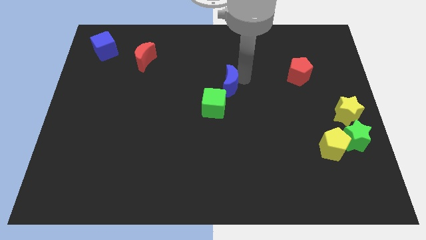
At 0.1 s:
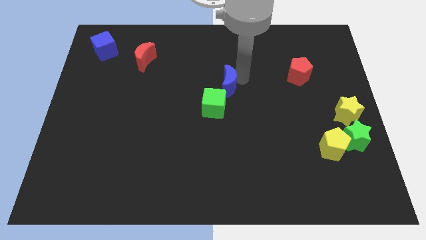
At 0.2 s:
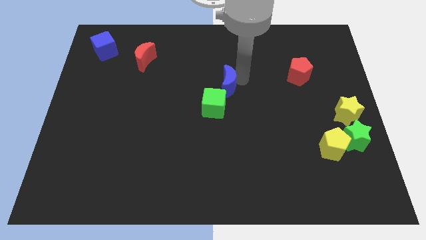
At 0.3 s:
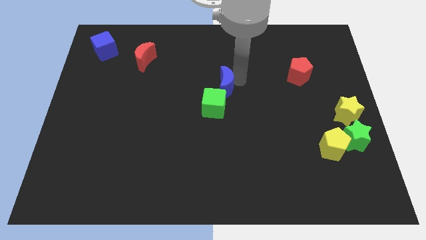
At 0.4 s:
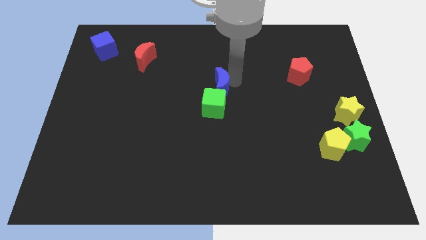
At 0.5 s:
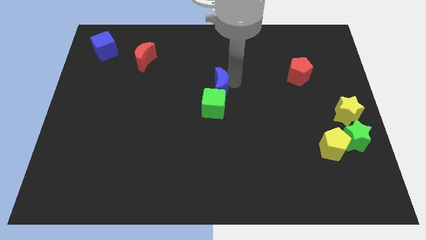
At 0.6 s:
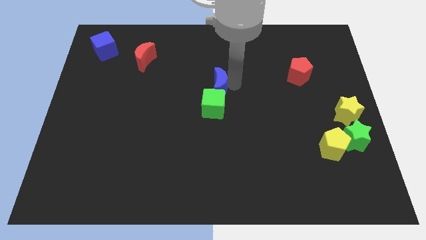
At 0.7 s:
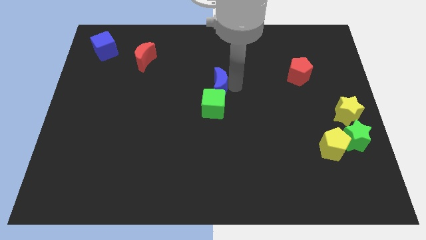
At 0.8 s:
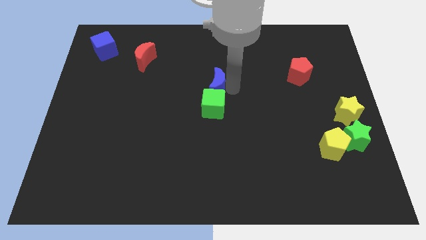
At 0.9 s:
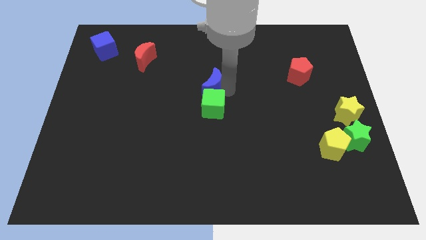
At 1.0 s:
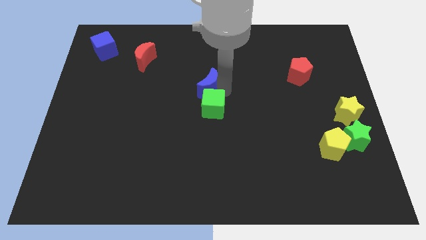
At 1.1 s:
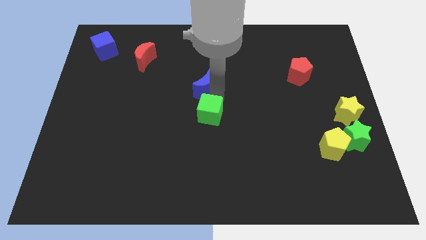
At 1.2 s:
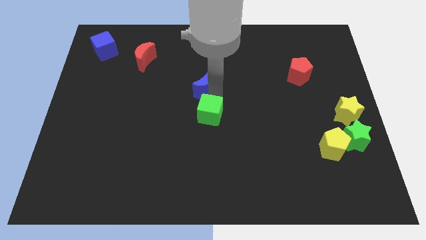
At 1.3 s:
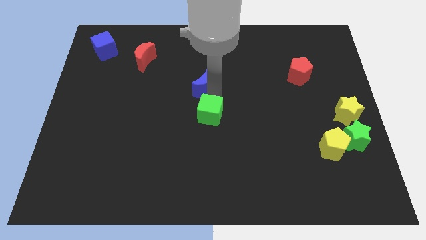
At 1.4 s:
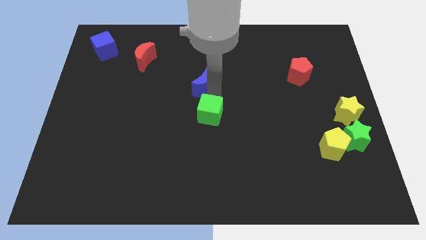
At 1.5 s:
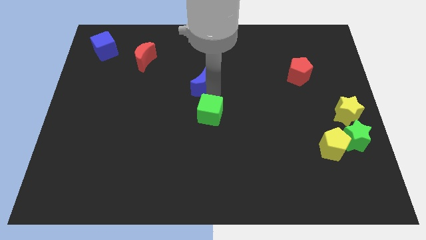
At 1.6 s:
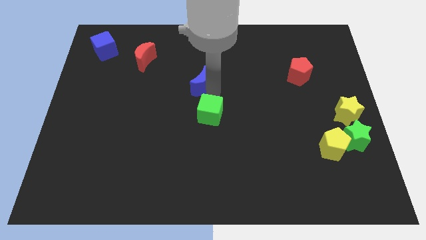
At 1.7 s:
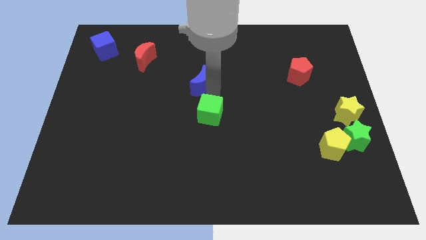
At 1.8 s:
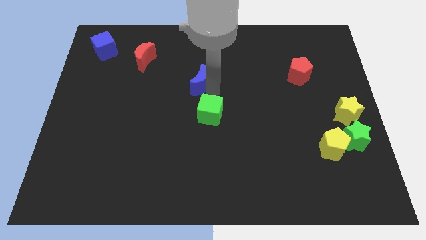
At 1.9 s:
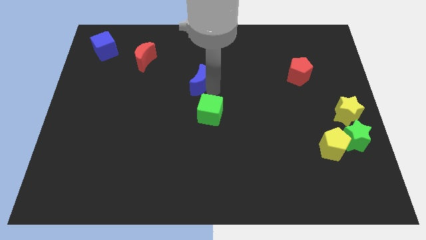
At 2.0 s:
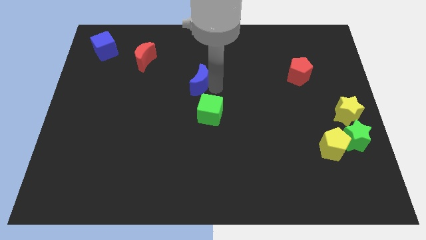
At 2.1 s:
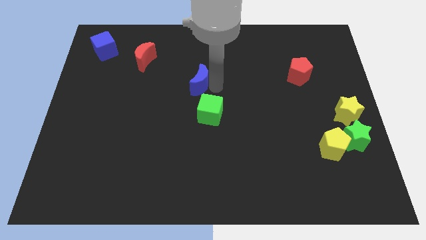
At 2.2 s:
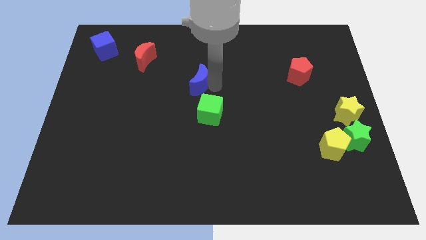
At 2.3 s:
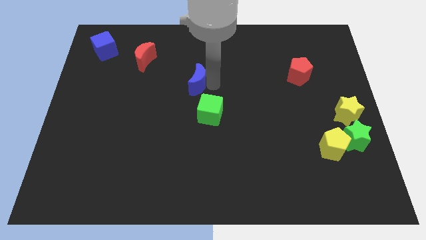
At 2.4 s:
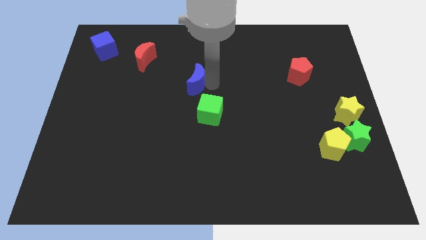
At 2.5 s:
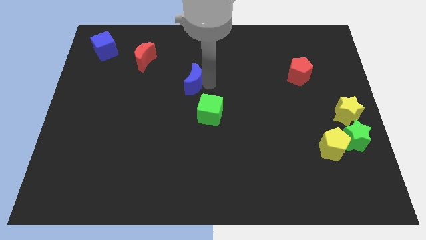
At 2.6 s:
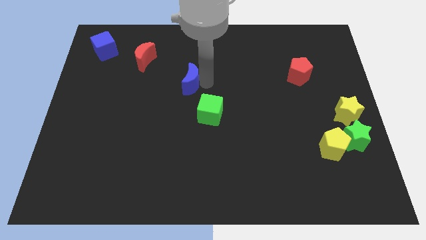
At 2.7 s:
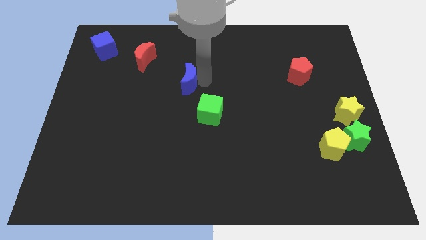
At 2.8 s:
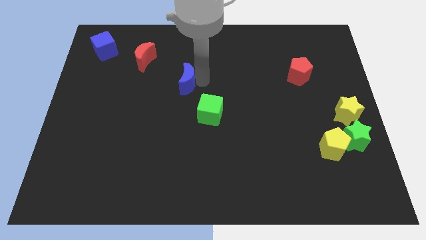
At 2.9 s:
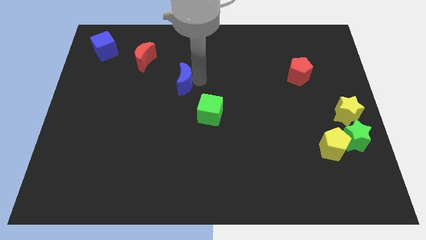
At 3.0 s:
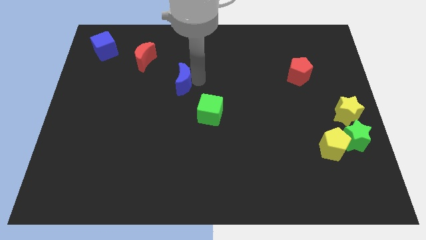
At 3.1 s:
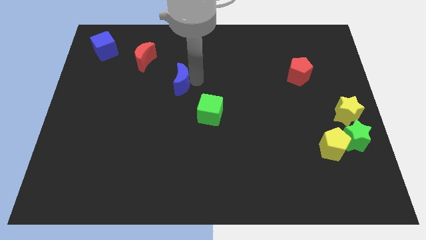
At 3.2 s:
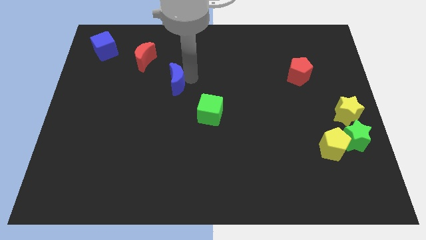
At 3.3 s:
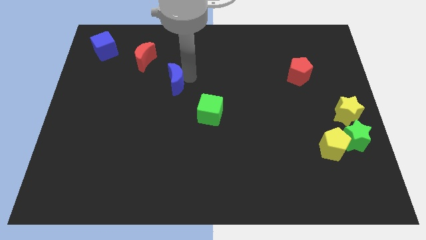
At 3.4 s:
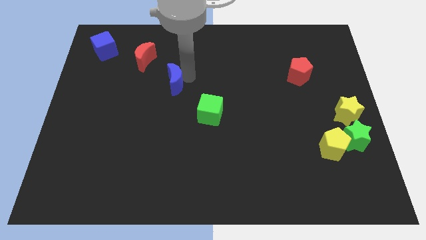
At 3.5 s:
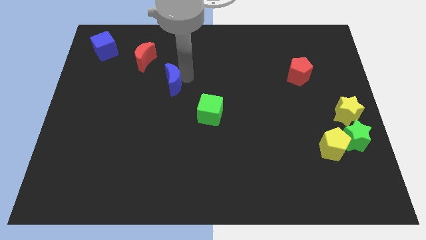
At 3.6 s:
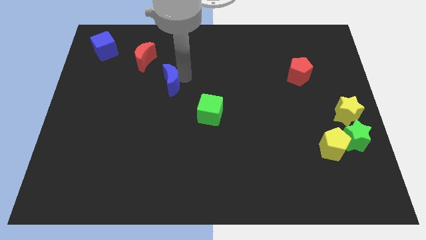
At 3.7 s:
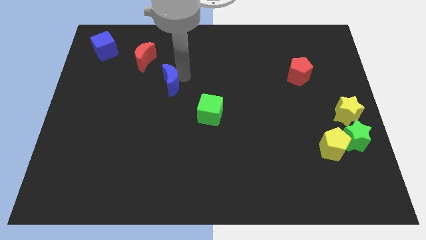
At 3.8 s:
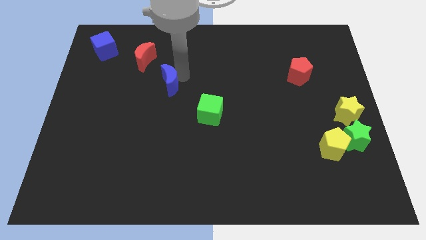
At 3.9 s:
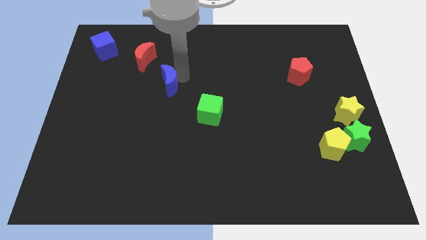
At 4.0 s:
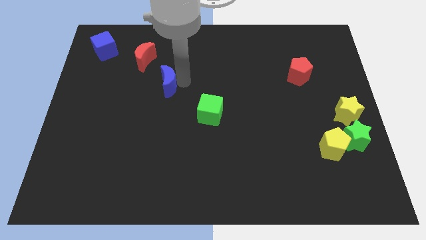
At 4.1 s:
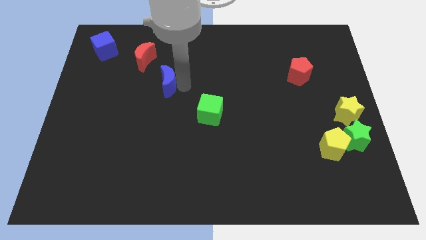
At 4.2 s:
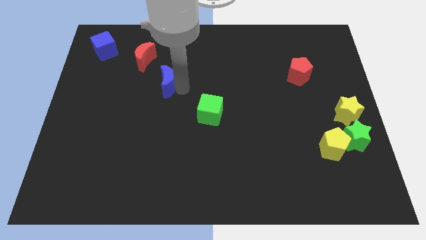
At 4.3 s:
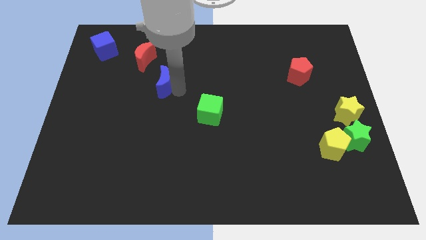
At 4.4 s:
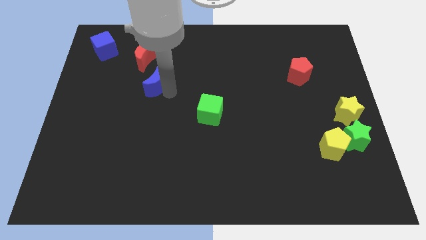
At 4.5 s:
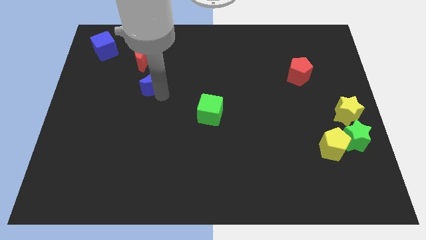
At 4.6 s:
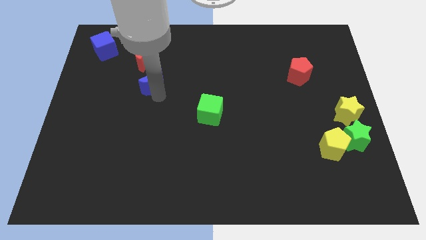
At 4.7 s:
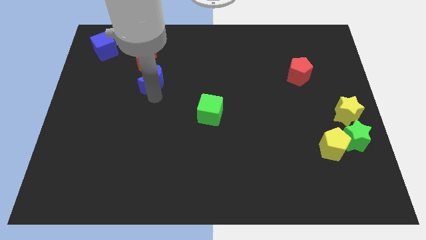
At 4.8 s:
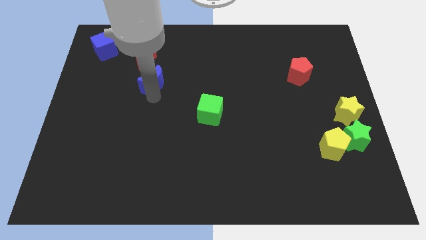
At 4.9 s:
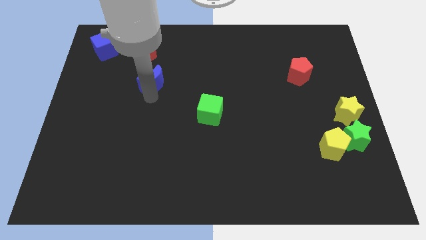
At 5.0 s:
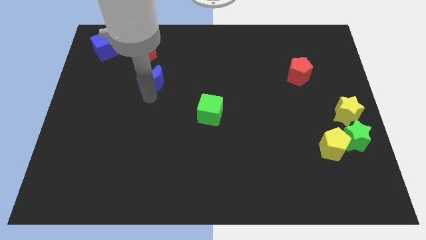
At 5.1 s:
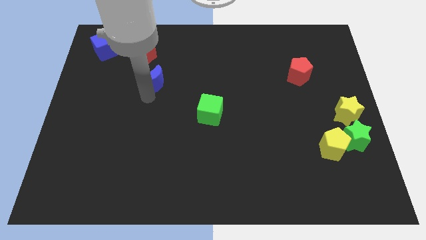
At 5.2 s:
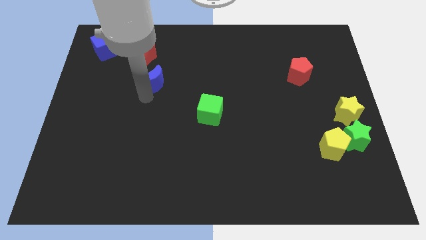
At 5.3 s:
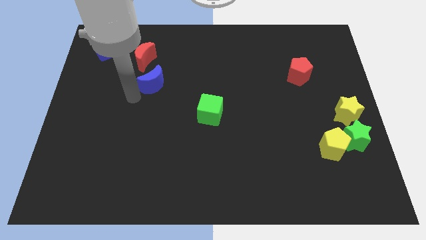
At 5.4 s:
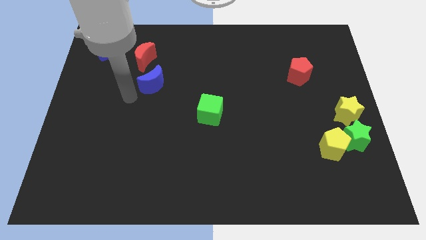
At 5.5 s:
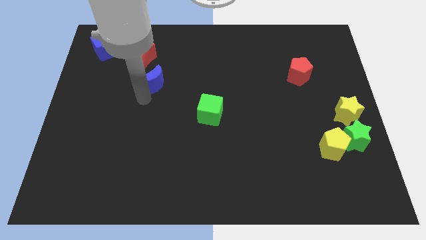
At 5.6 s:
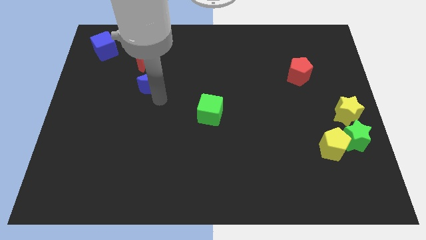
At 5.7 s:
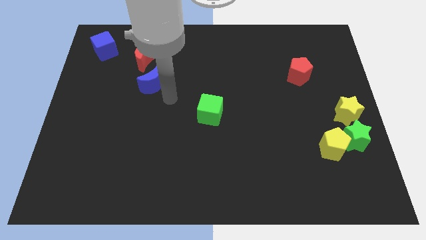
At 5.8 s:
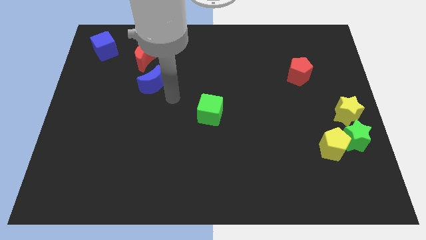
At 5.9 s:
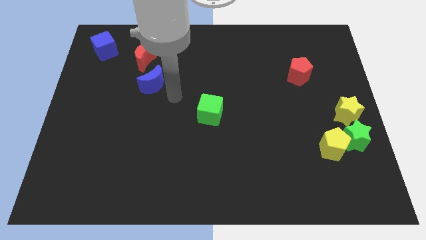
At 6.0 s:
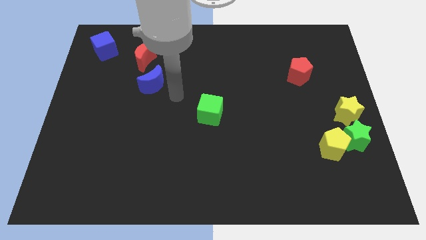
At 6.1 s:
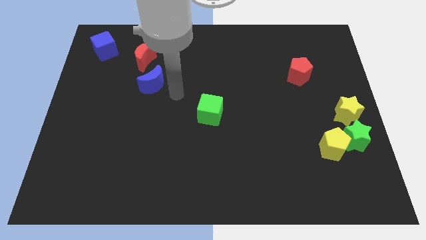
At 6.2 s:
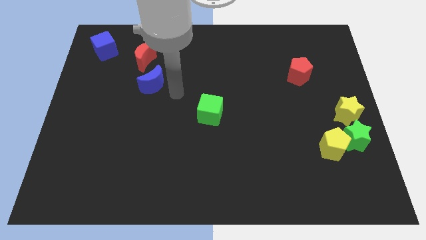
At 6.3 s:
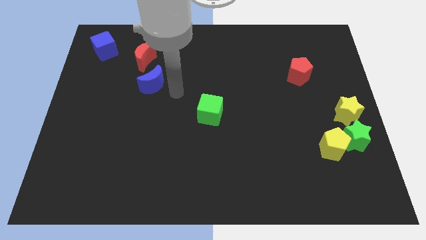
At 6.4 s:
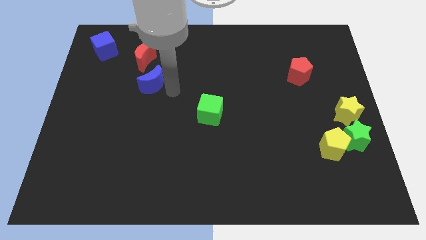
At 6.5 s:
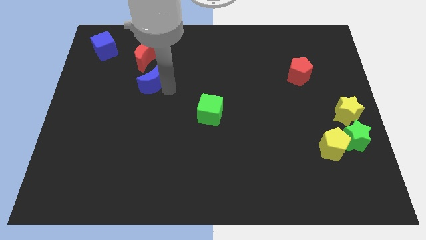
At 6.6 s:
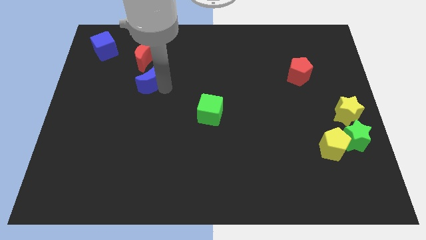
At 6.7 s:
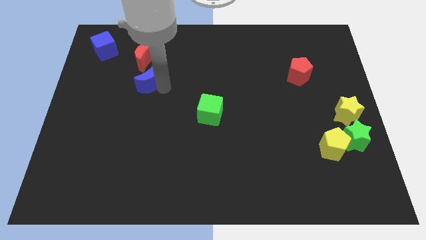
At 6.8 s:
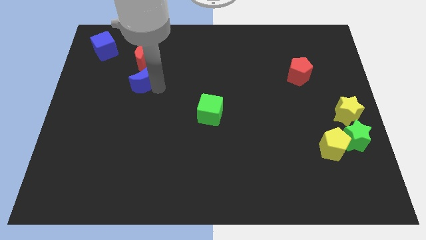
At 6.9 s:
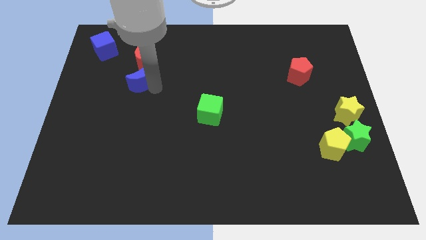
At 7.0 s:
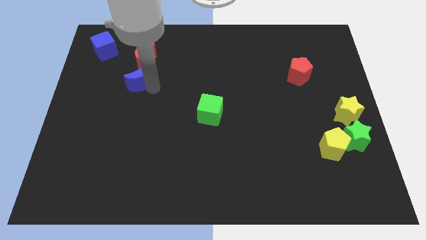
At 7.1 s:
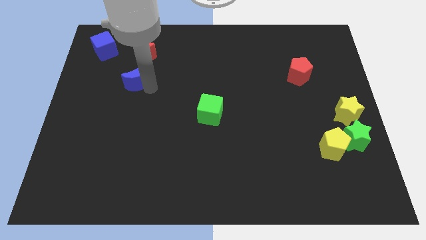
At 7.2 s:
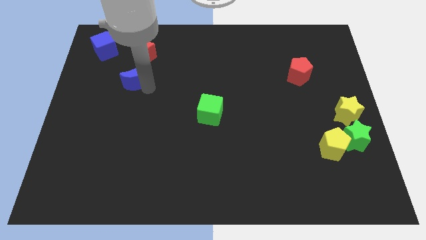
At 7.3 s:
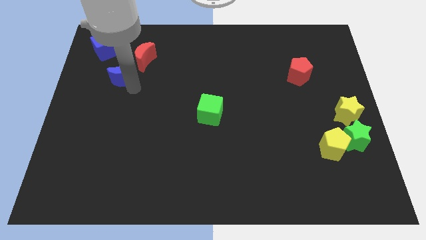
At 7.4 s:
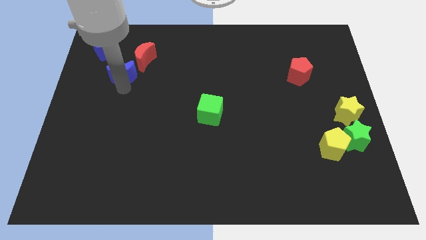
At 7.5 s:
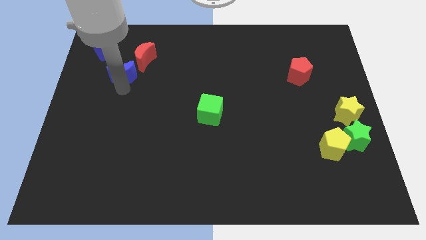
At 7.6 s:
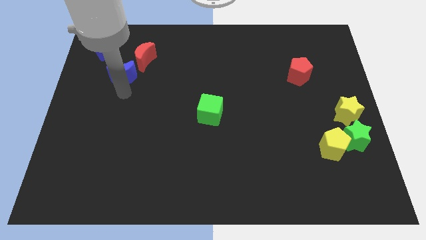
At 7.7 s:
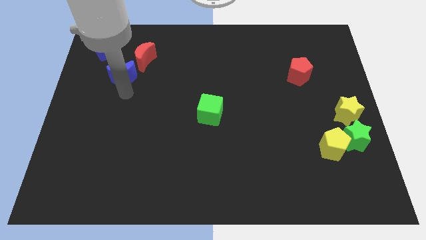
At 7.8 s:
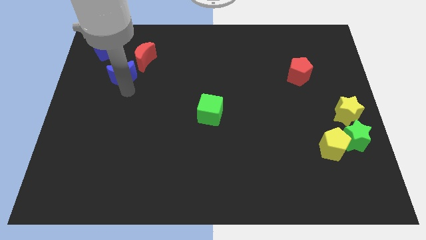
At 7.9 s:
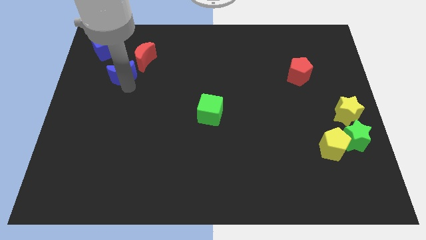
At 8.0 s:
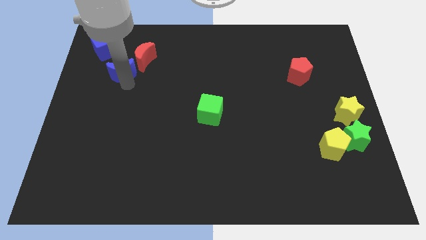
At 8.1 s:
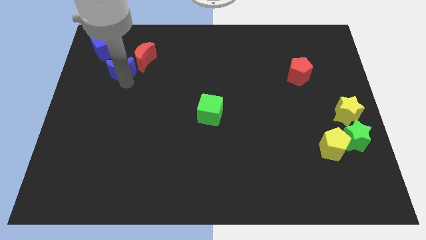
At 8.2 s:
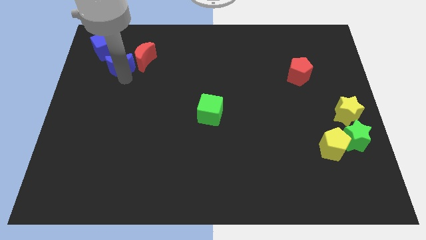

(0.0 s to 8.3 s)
place the blue moon left to the red moon

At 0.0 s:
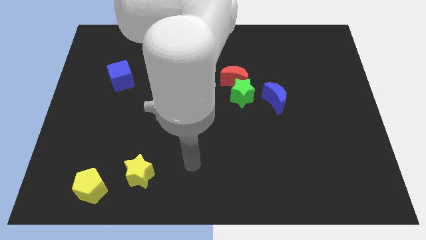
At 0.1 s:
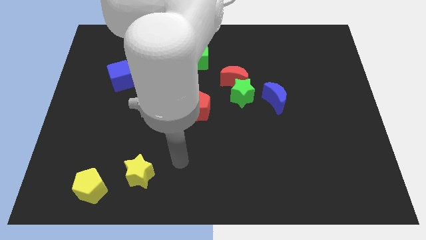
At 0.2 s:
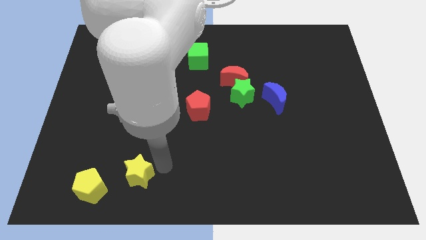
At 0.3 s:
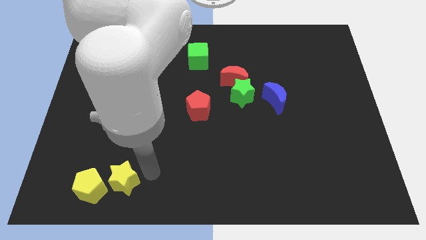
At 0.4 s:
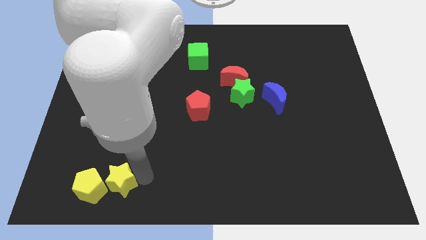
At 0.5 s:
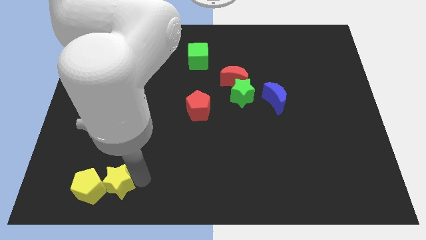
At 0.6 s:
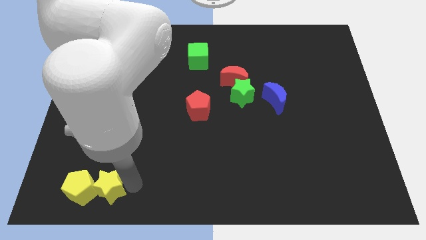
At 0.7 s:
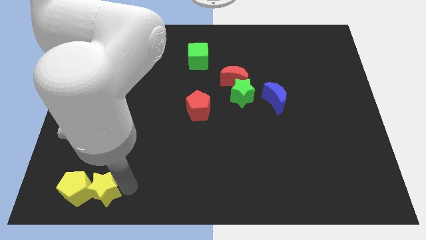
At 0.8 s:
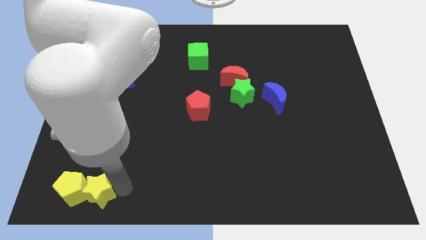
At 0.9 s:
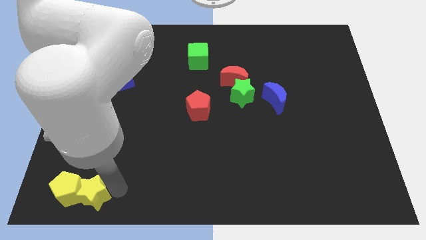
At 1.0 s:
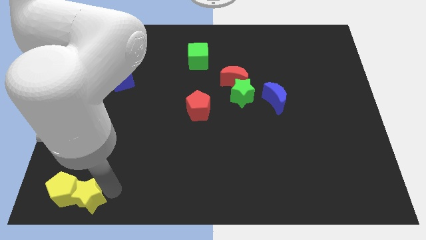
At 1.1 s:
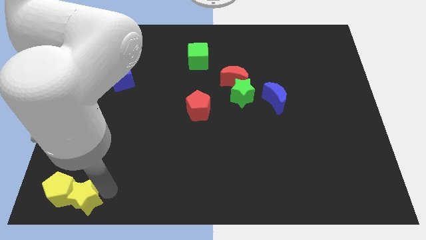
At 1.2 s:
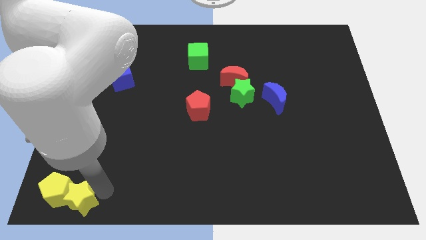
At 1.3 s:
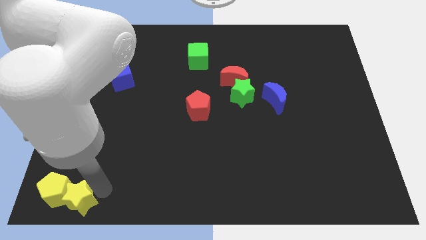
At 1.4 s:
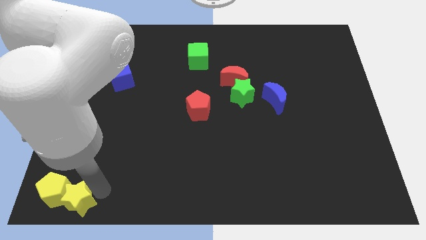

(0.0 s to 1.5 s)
push the yellow star into the yellow pentagon
